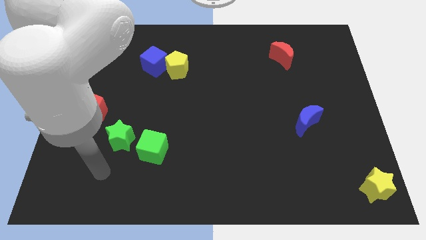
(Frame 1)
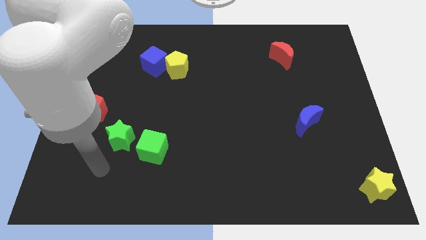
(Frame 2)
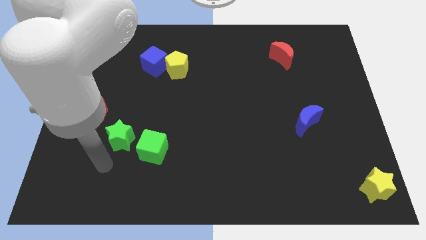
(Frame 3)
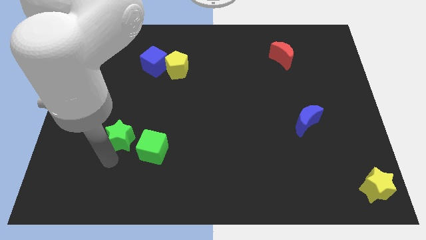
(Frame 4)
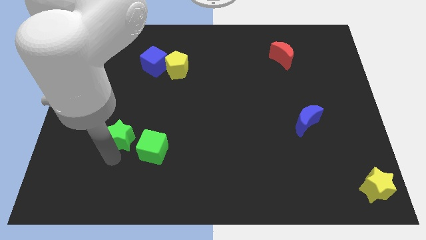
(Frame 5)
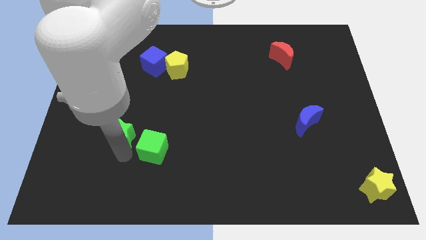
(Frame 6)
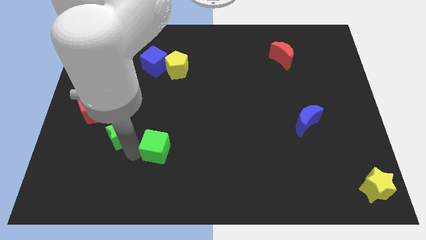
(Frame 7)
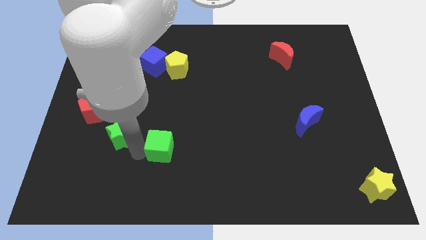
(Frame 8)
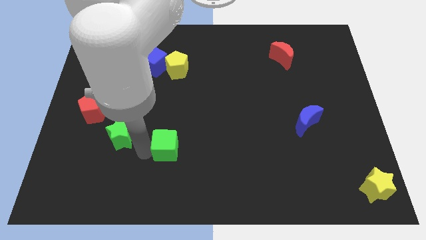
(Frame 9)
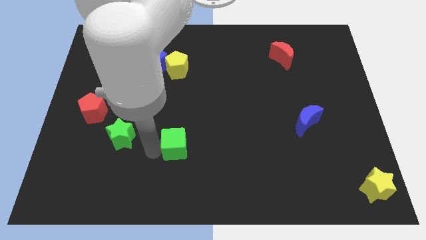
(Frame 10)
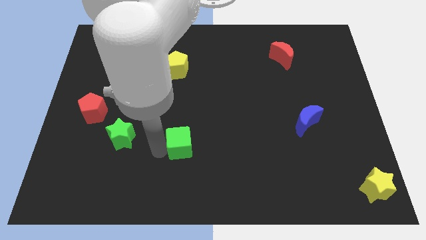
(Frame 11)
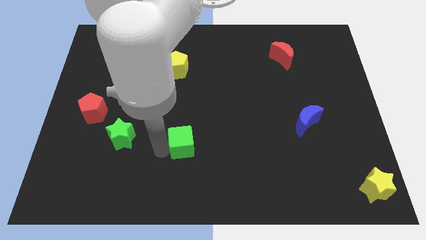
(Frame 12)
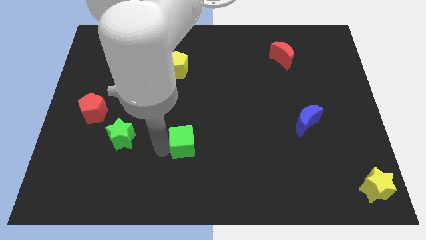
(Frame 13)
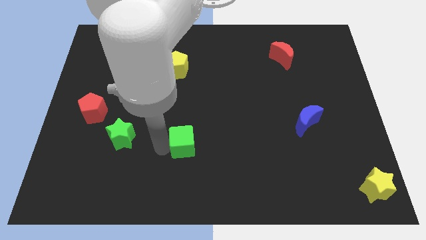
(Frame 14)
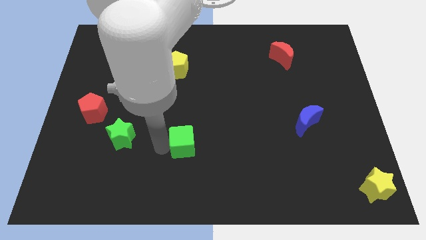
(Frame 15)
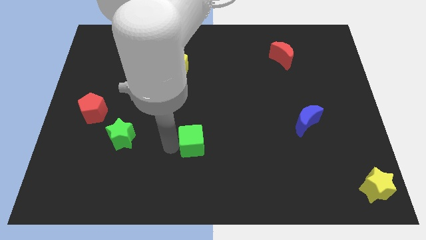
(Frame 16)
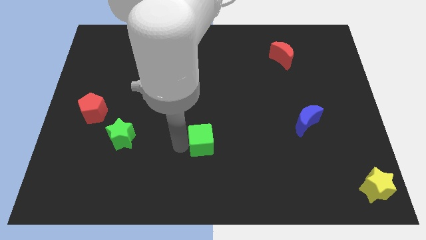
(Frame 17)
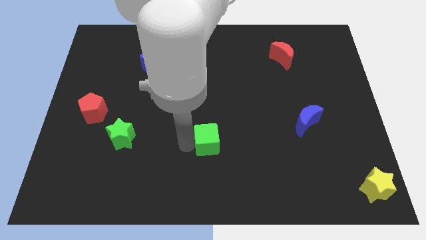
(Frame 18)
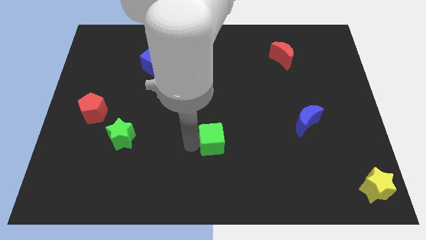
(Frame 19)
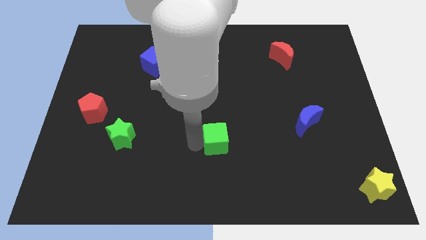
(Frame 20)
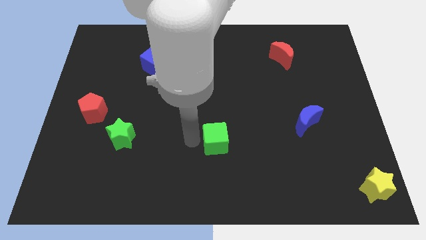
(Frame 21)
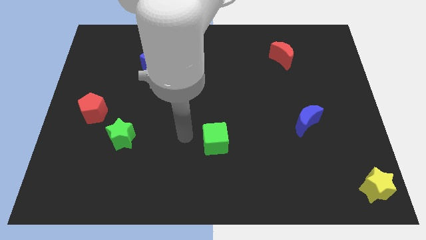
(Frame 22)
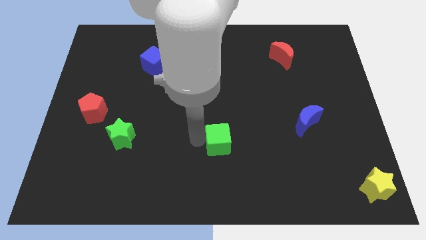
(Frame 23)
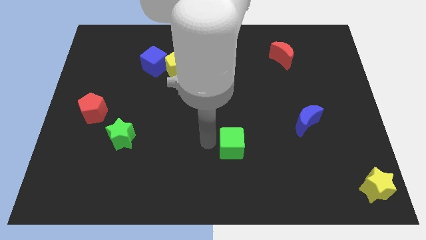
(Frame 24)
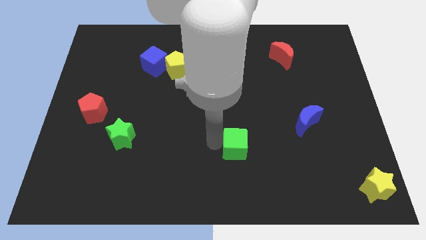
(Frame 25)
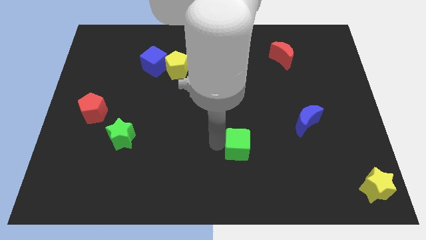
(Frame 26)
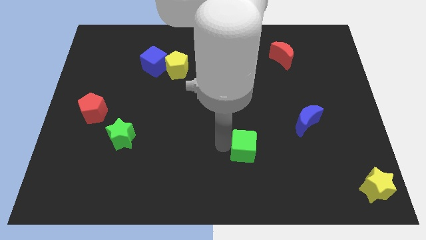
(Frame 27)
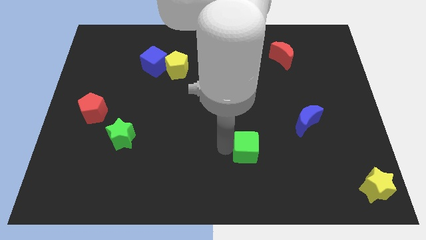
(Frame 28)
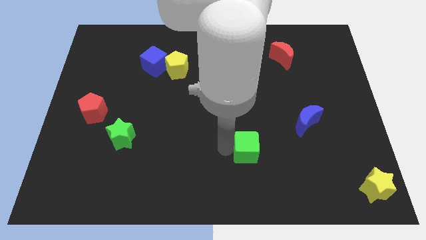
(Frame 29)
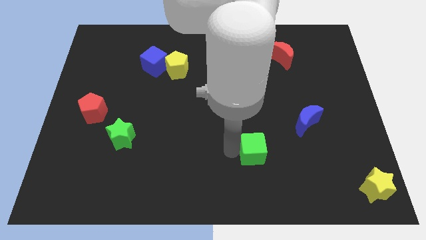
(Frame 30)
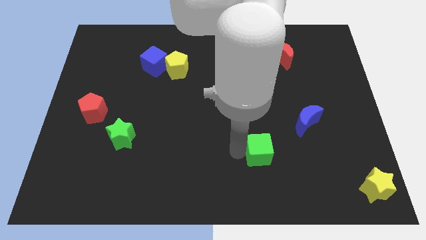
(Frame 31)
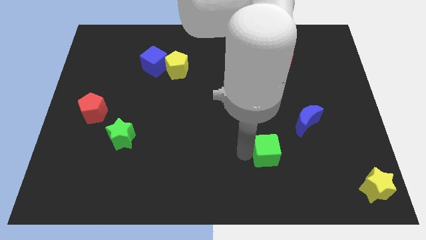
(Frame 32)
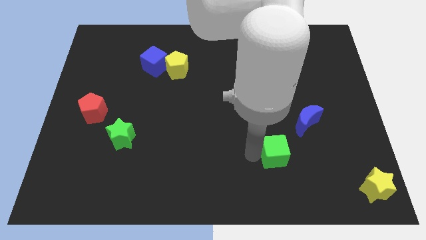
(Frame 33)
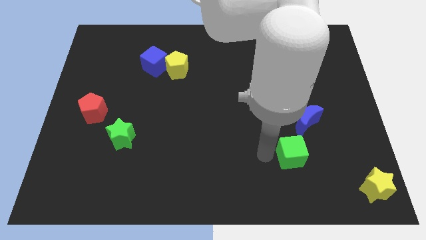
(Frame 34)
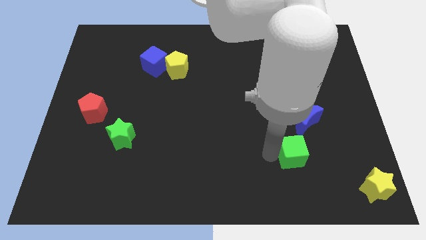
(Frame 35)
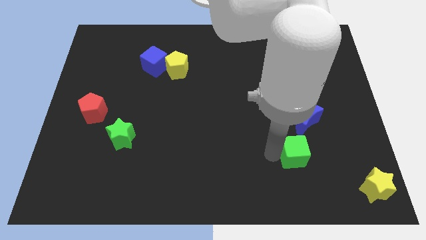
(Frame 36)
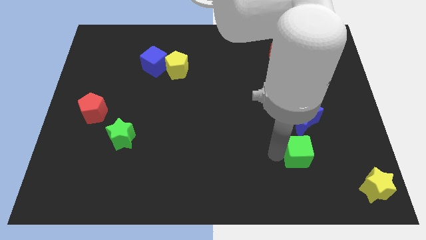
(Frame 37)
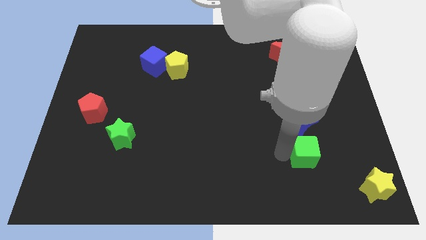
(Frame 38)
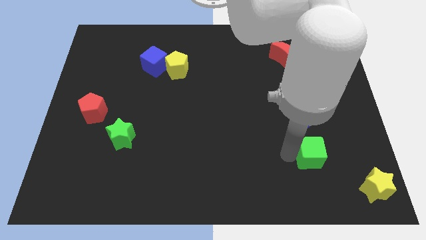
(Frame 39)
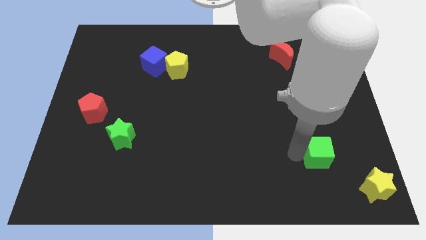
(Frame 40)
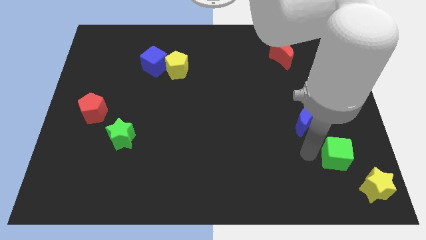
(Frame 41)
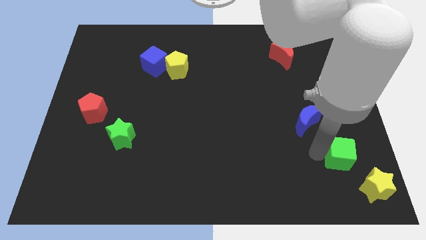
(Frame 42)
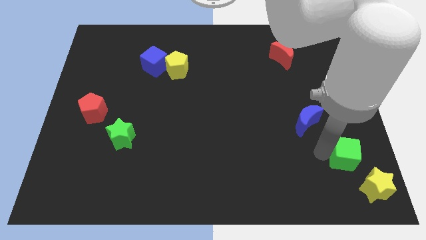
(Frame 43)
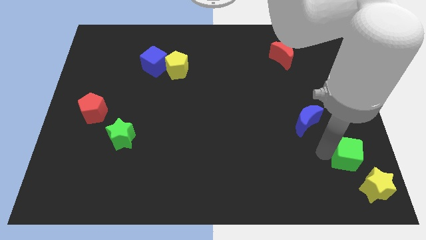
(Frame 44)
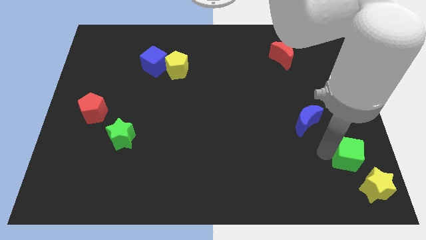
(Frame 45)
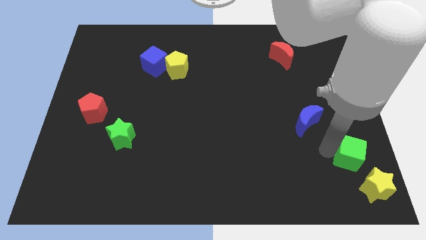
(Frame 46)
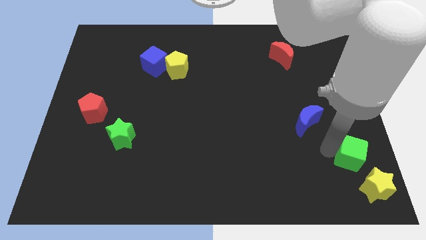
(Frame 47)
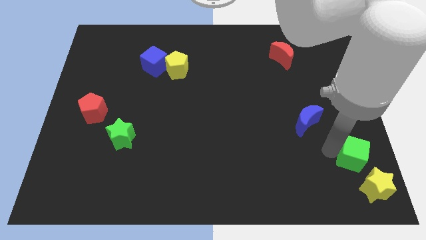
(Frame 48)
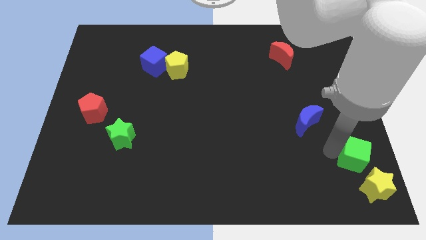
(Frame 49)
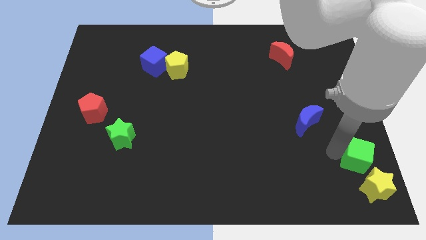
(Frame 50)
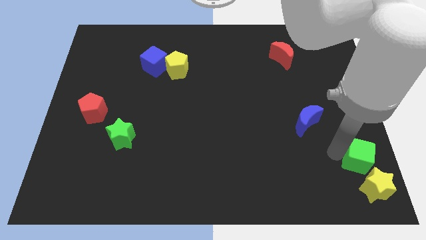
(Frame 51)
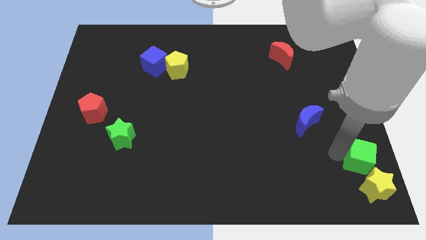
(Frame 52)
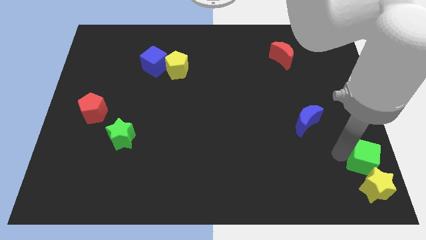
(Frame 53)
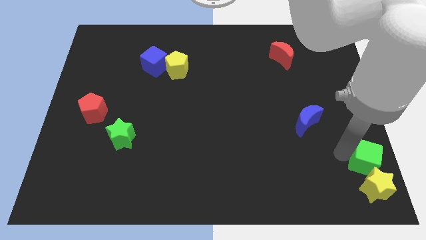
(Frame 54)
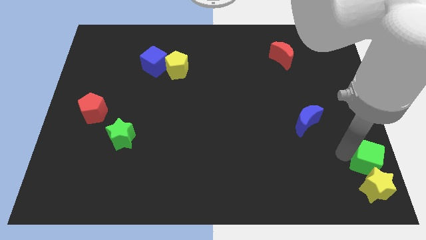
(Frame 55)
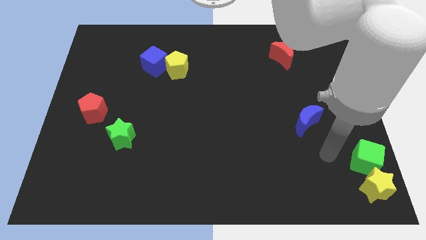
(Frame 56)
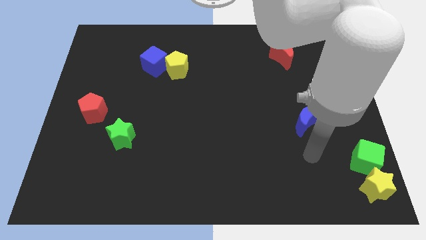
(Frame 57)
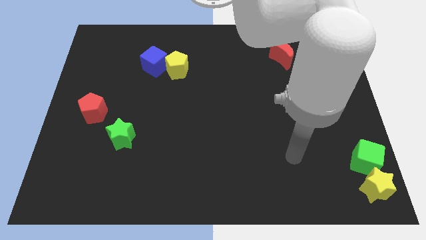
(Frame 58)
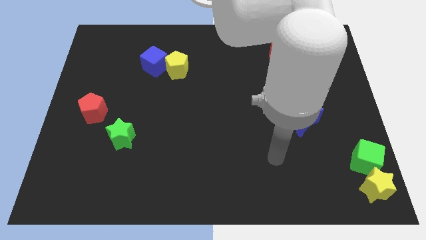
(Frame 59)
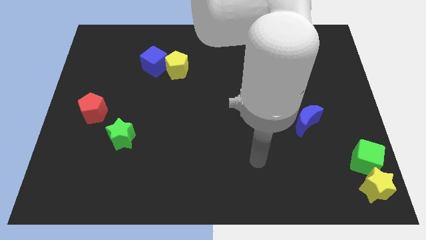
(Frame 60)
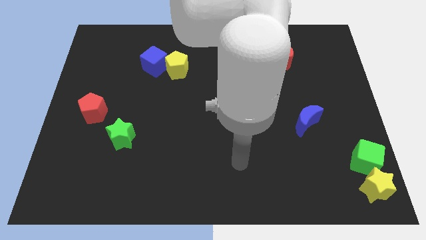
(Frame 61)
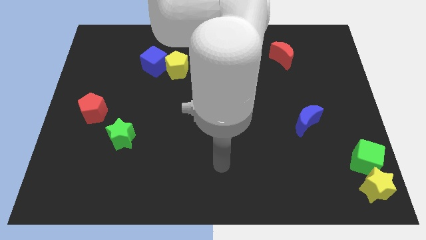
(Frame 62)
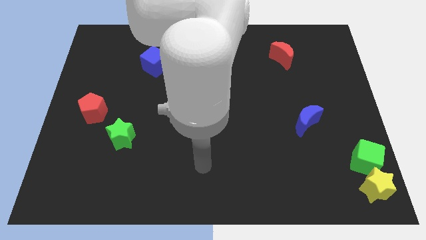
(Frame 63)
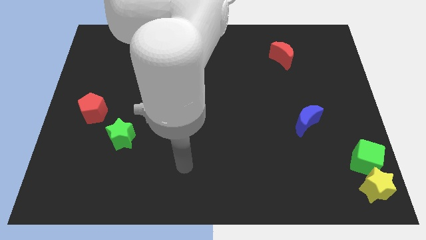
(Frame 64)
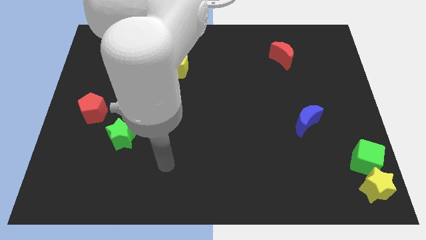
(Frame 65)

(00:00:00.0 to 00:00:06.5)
place green block at the top of yellow star

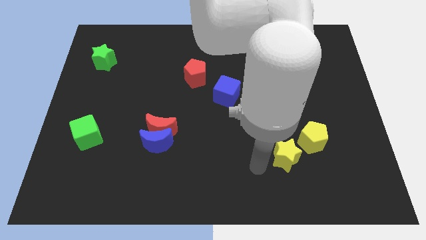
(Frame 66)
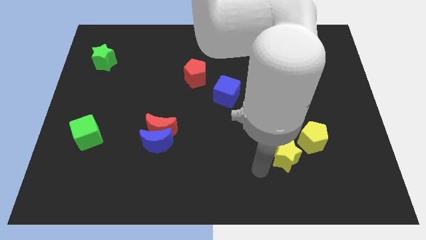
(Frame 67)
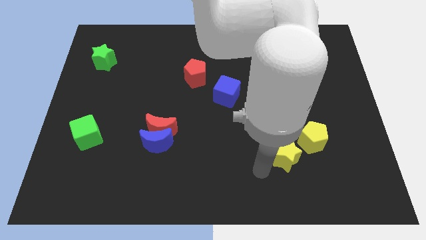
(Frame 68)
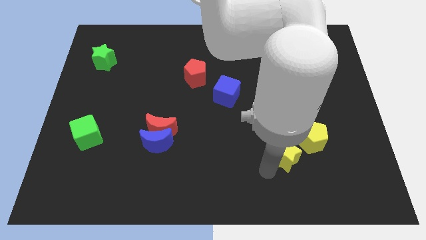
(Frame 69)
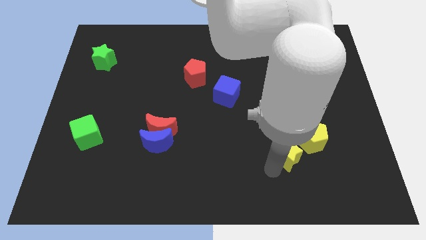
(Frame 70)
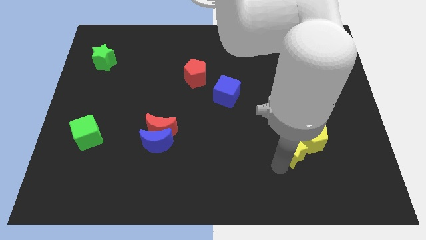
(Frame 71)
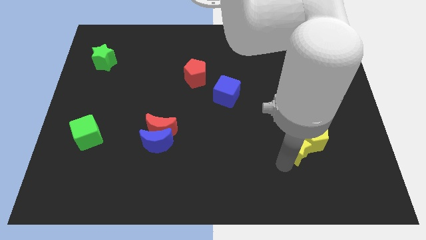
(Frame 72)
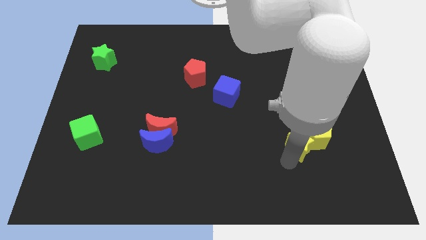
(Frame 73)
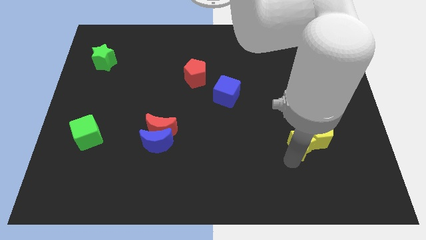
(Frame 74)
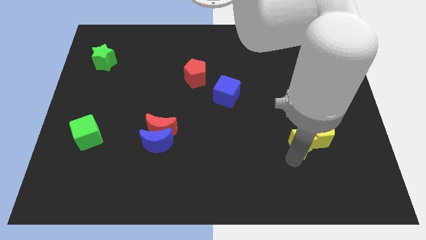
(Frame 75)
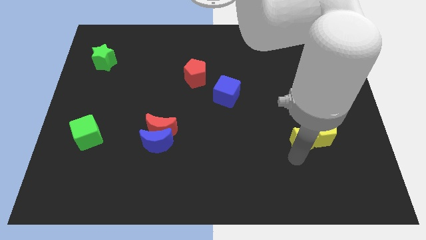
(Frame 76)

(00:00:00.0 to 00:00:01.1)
push the yellow star into the yellow pentagon

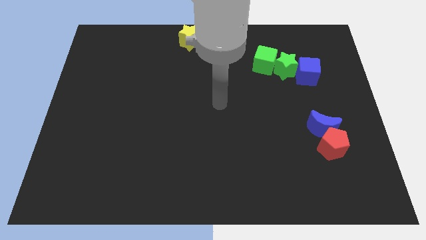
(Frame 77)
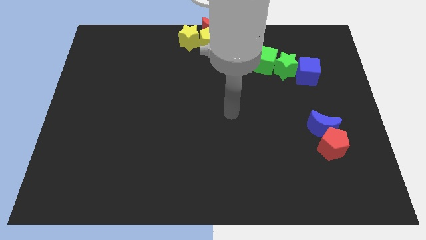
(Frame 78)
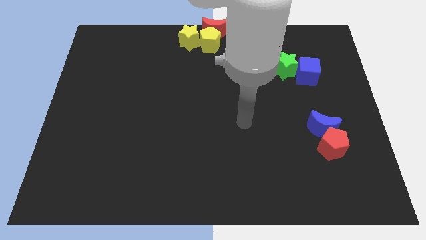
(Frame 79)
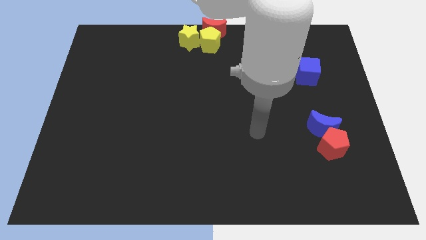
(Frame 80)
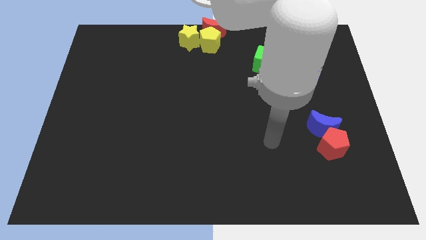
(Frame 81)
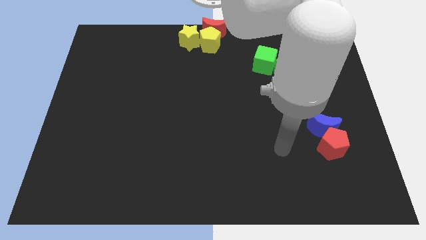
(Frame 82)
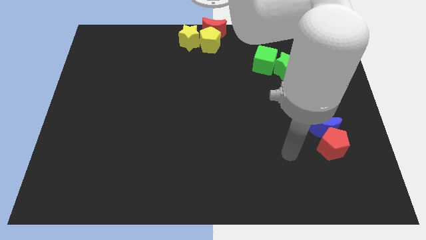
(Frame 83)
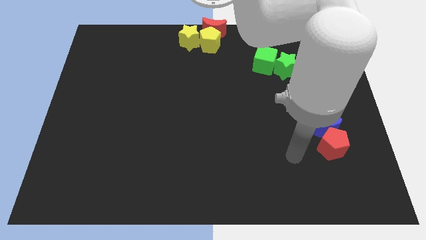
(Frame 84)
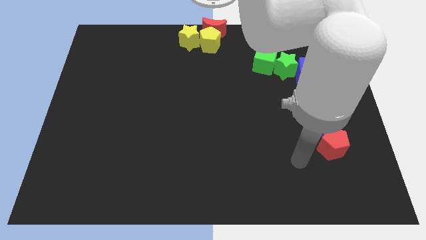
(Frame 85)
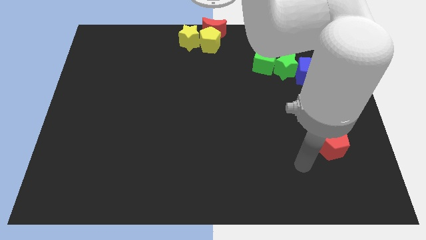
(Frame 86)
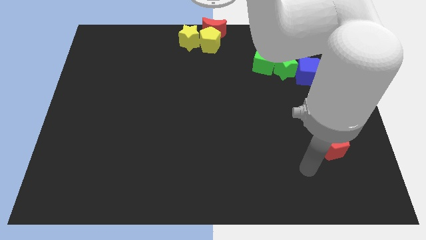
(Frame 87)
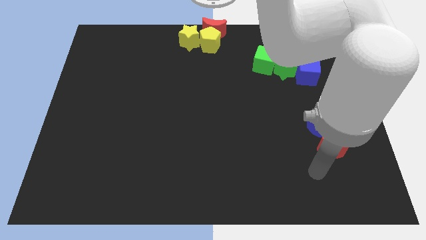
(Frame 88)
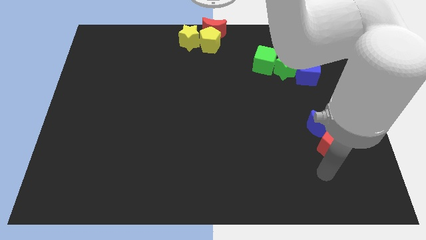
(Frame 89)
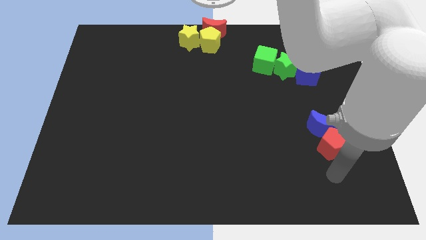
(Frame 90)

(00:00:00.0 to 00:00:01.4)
point below the red pentagon

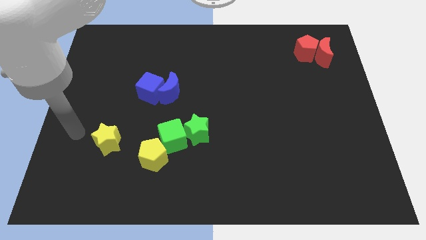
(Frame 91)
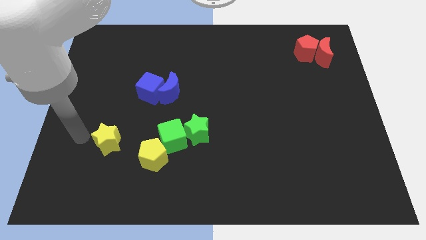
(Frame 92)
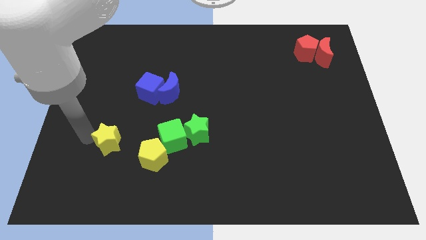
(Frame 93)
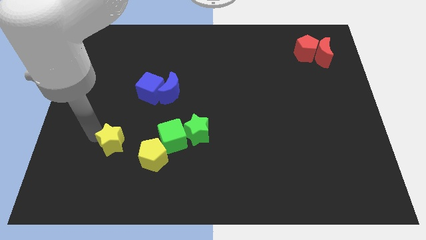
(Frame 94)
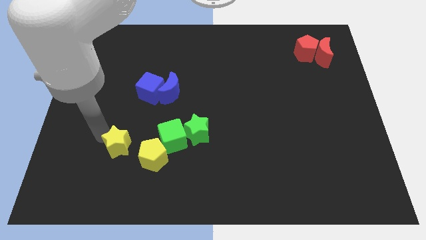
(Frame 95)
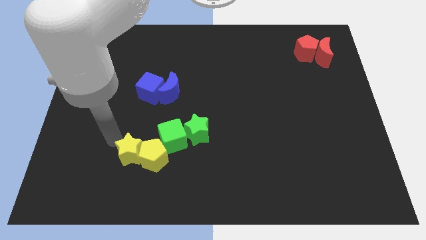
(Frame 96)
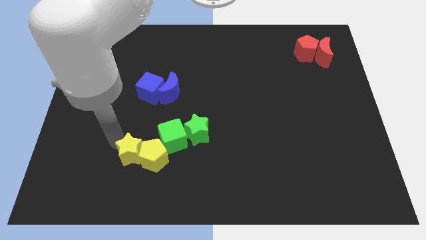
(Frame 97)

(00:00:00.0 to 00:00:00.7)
touch the yellow pentagon with yellow star
